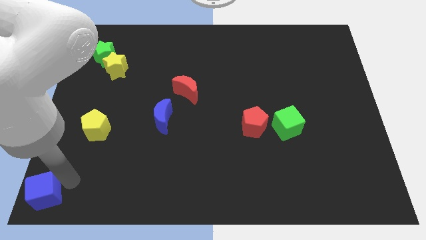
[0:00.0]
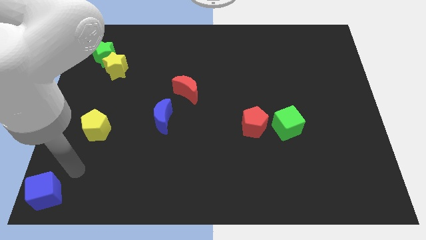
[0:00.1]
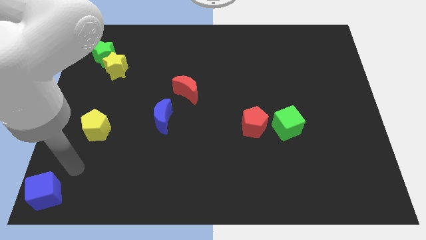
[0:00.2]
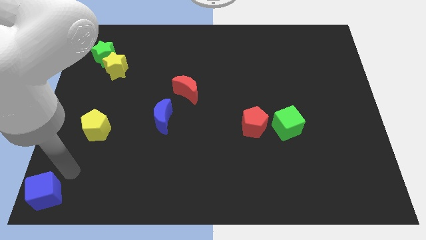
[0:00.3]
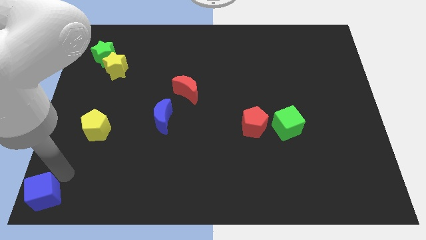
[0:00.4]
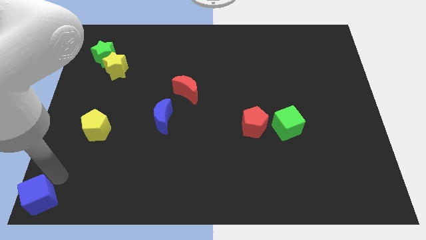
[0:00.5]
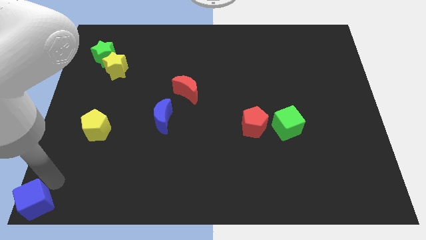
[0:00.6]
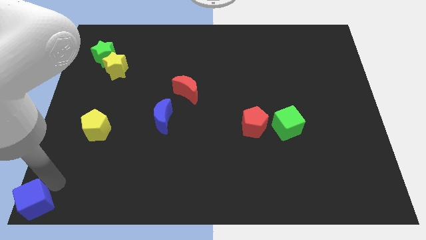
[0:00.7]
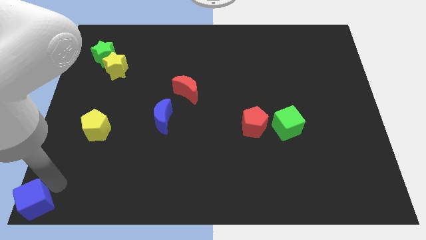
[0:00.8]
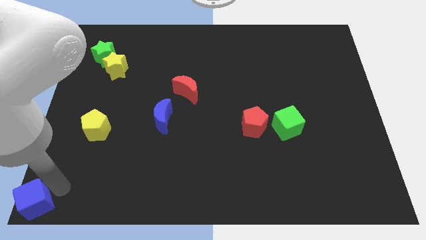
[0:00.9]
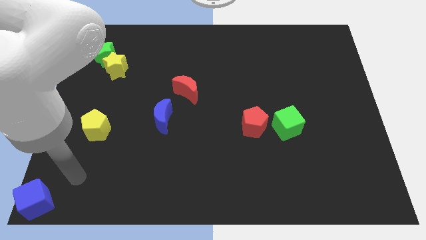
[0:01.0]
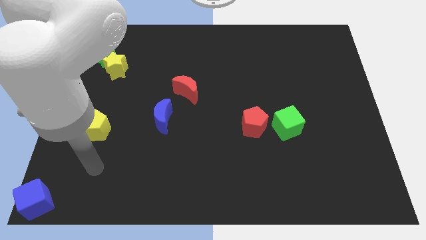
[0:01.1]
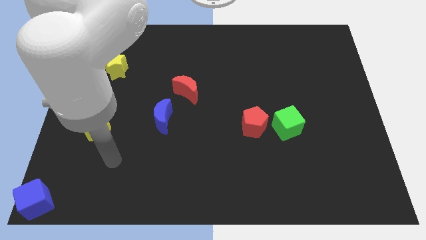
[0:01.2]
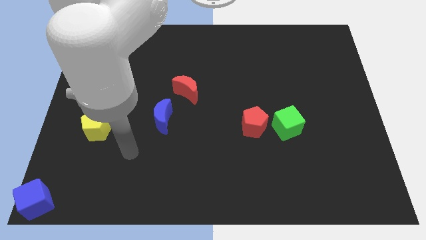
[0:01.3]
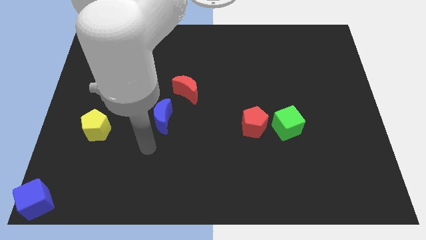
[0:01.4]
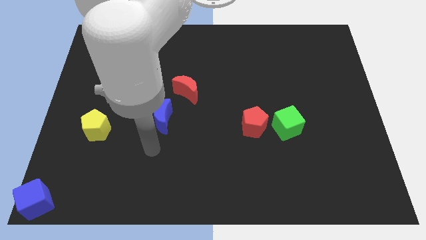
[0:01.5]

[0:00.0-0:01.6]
move the blue cube and place it at the left bottom side of the board

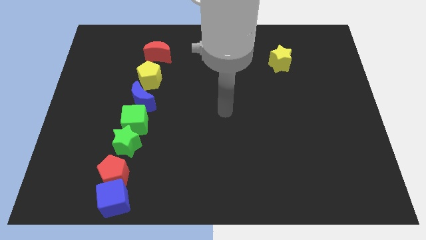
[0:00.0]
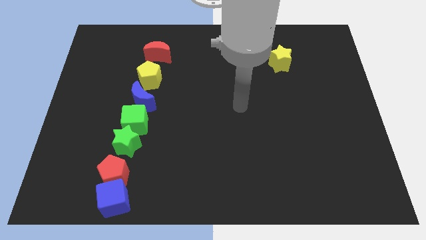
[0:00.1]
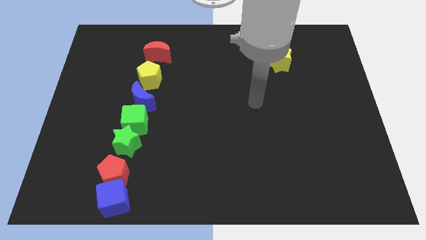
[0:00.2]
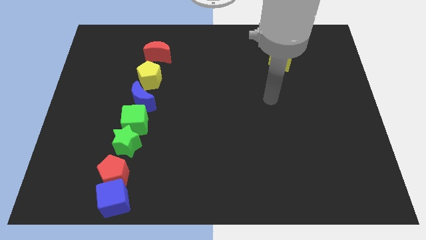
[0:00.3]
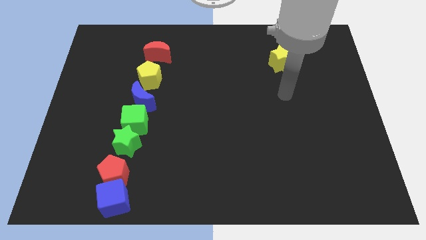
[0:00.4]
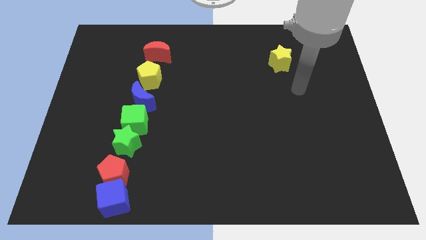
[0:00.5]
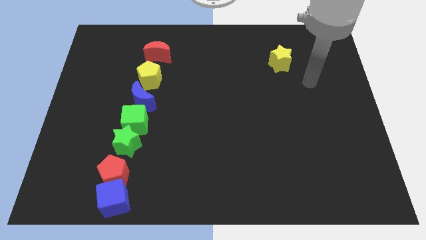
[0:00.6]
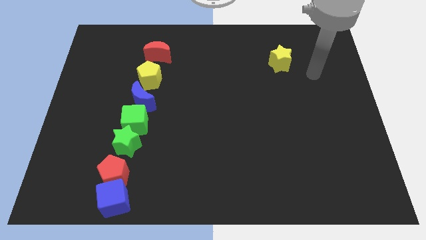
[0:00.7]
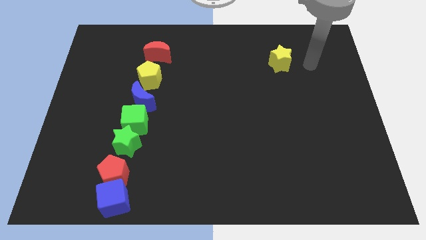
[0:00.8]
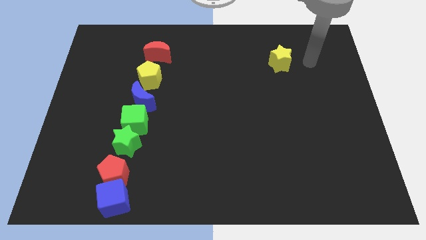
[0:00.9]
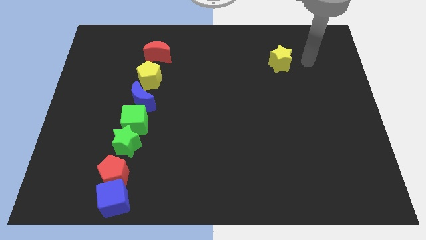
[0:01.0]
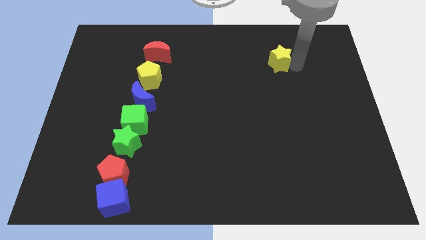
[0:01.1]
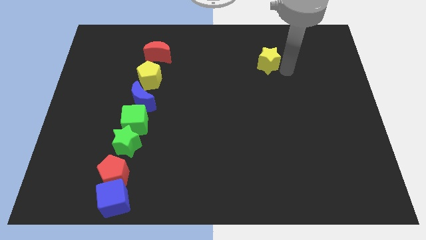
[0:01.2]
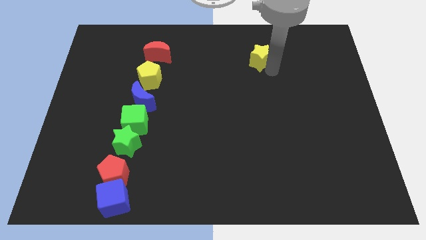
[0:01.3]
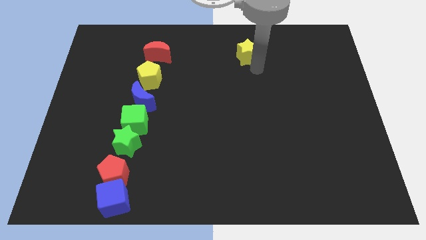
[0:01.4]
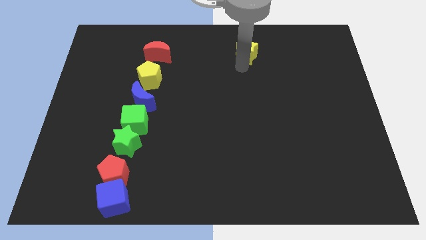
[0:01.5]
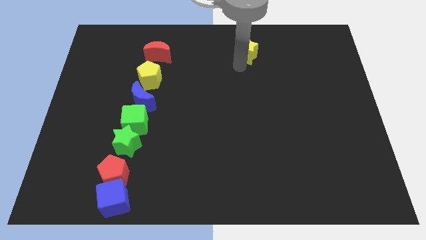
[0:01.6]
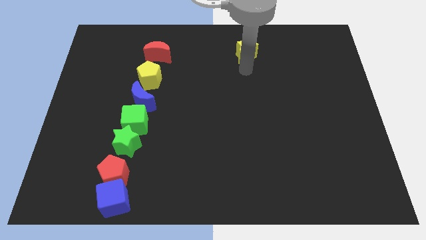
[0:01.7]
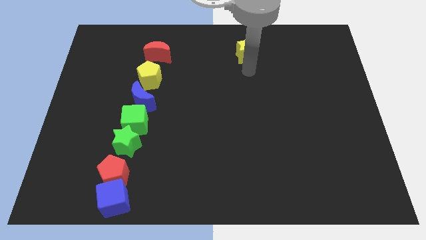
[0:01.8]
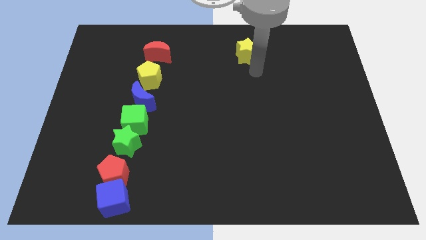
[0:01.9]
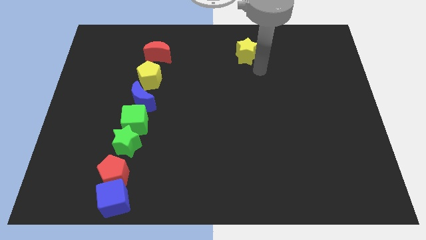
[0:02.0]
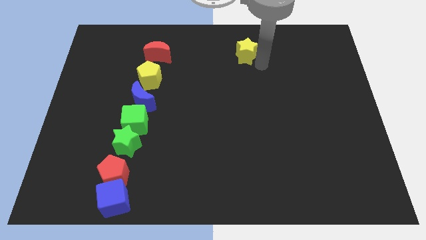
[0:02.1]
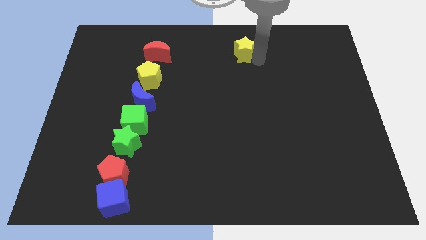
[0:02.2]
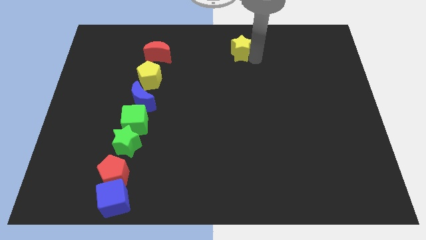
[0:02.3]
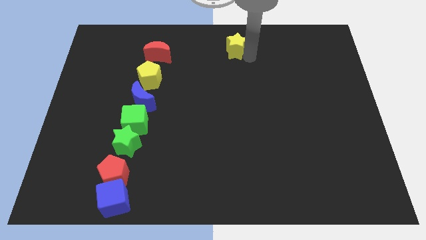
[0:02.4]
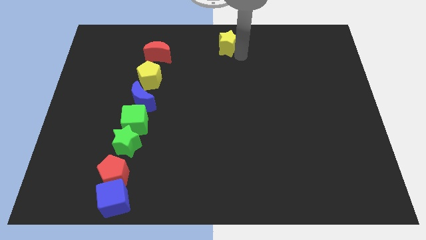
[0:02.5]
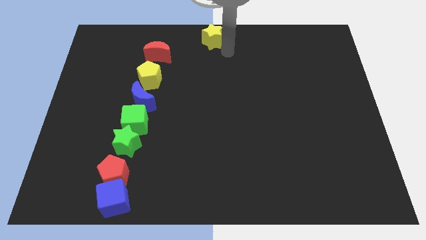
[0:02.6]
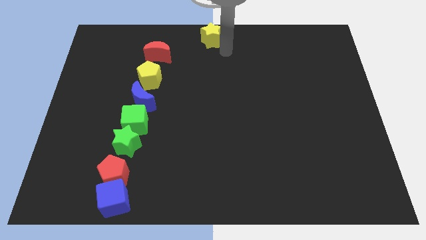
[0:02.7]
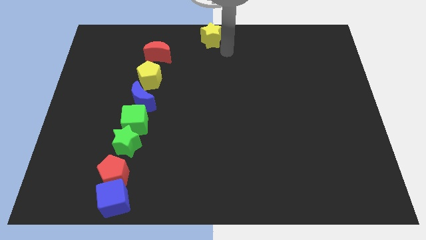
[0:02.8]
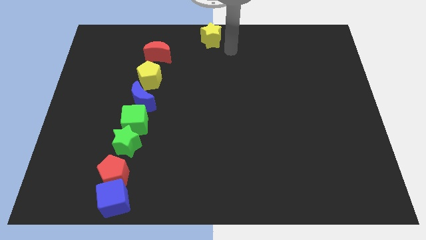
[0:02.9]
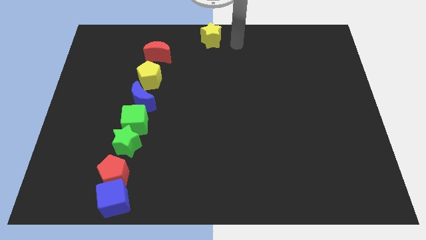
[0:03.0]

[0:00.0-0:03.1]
move yellow star in the top center

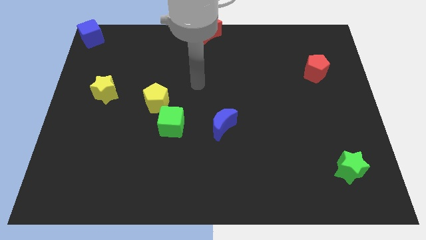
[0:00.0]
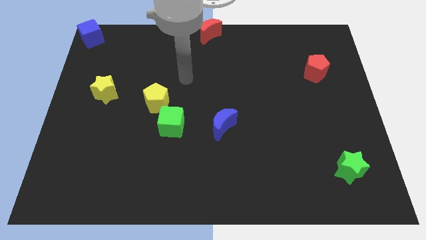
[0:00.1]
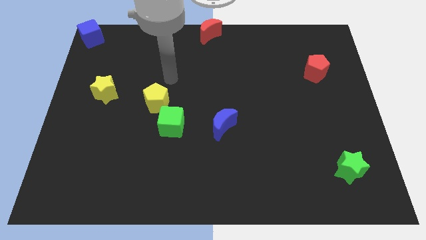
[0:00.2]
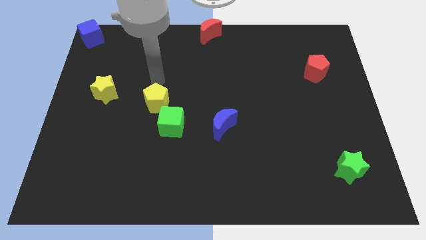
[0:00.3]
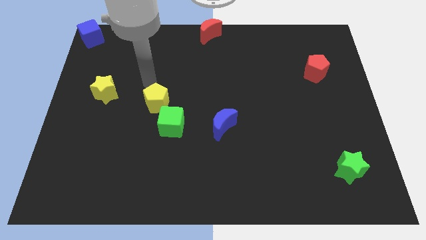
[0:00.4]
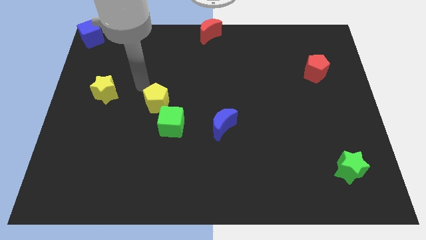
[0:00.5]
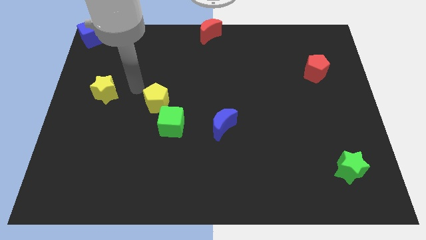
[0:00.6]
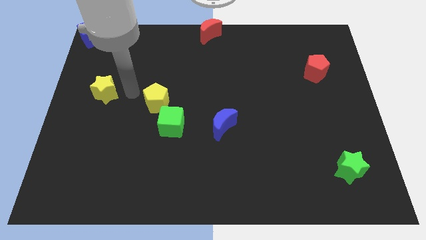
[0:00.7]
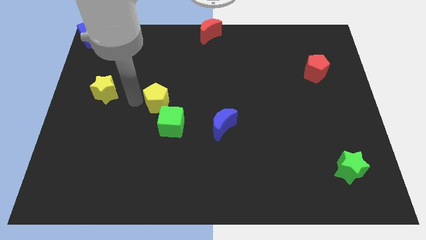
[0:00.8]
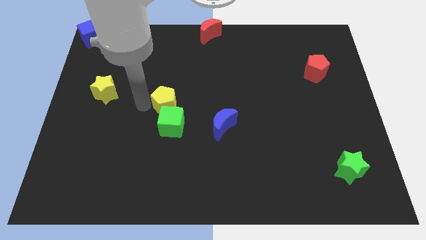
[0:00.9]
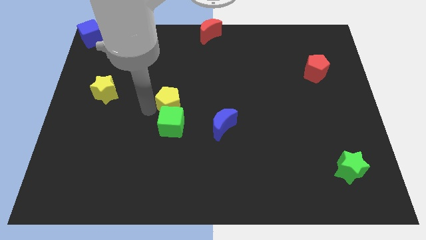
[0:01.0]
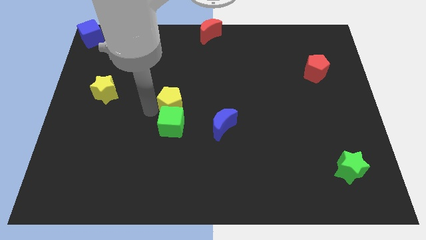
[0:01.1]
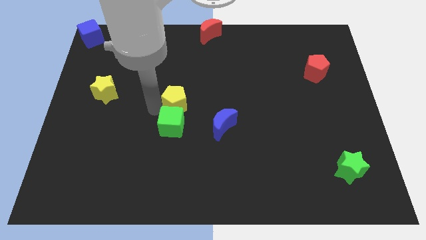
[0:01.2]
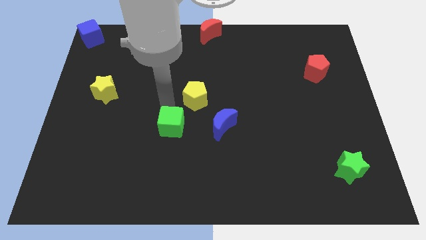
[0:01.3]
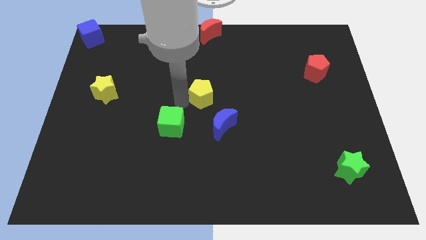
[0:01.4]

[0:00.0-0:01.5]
move the yellow pentagon to the centre of the board

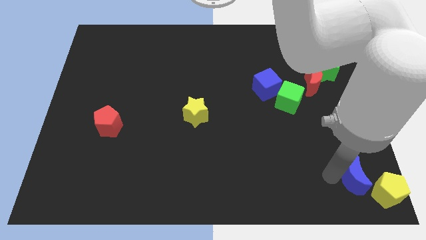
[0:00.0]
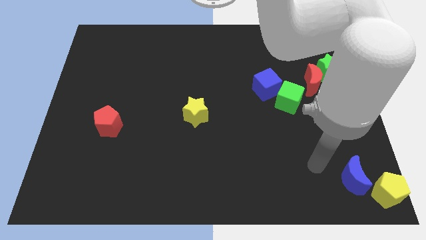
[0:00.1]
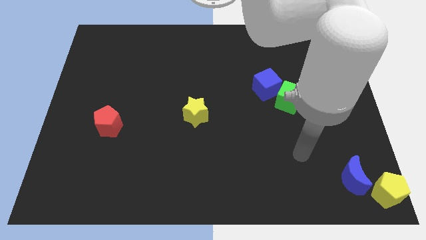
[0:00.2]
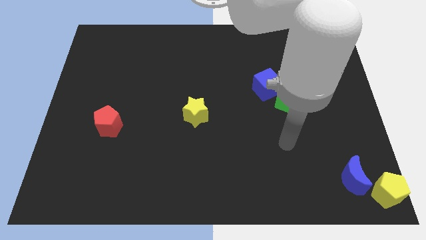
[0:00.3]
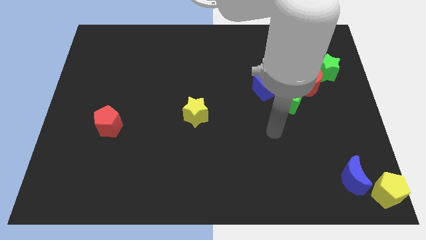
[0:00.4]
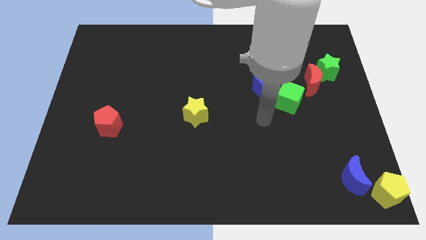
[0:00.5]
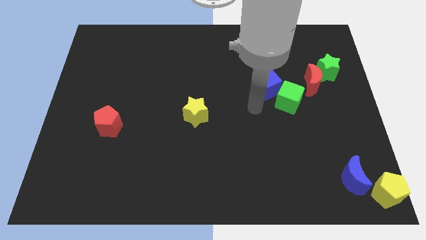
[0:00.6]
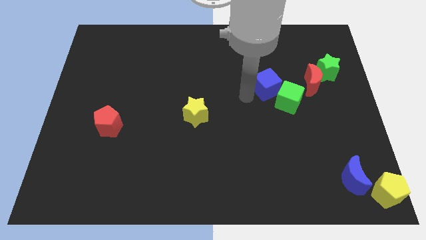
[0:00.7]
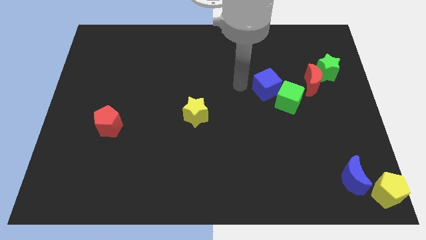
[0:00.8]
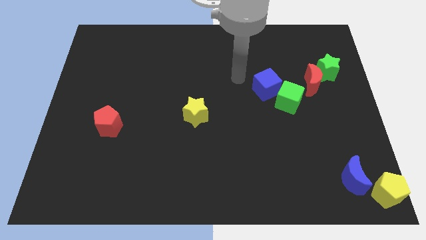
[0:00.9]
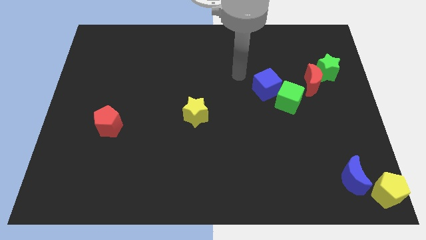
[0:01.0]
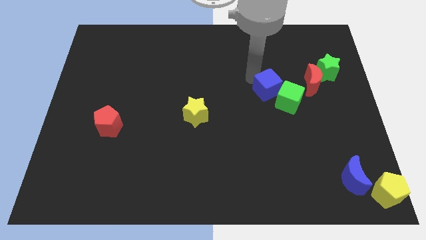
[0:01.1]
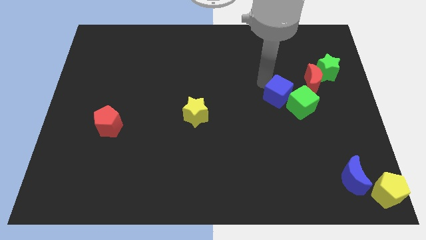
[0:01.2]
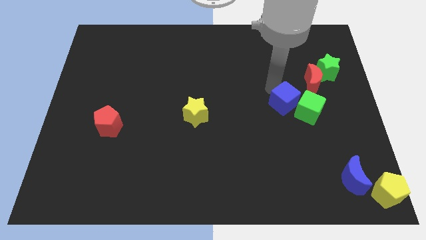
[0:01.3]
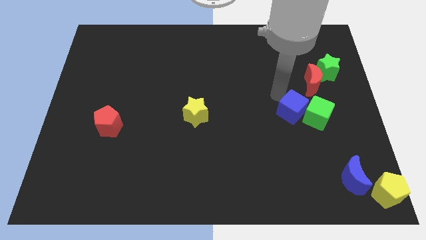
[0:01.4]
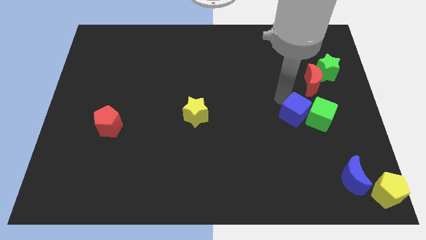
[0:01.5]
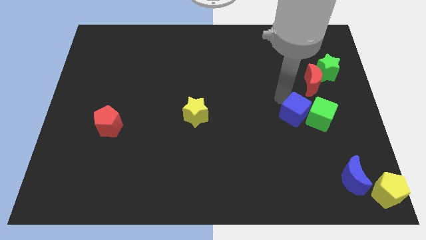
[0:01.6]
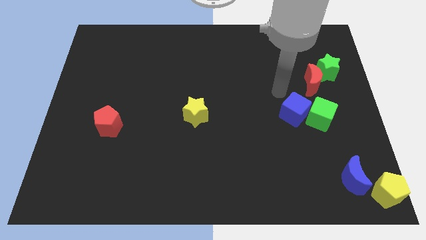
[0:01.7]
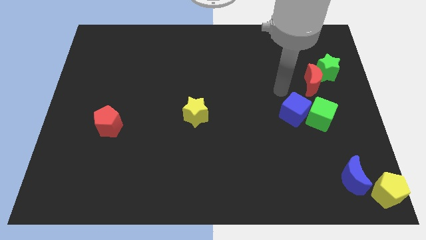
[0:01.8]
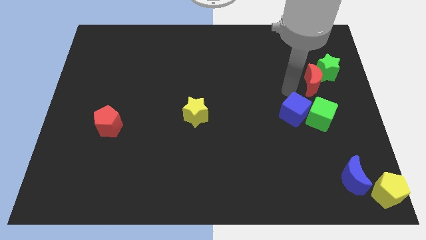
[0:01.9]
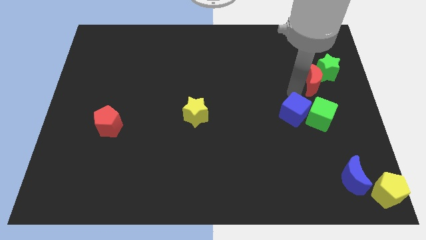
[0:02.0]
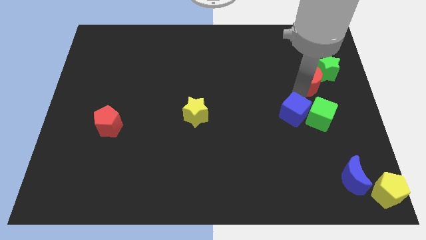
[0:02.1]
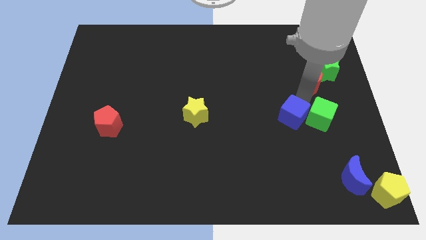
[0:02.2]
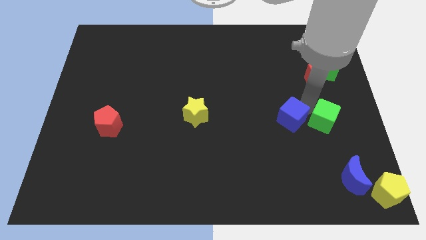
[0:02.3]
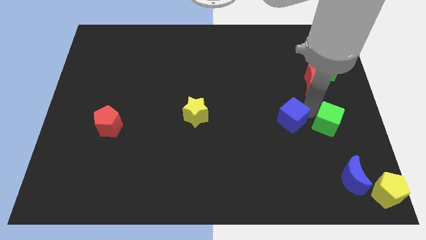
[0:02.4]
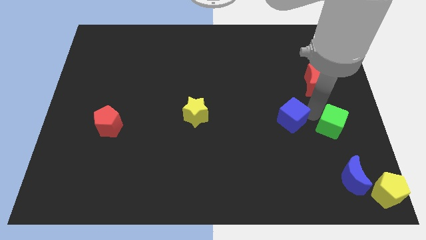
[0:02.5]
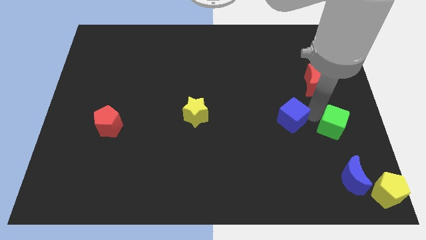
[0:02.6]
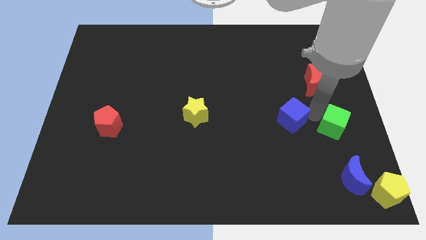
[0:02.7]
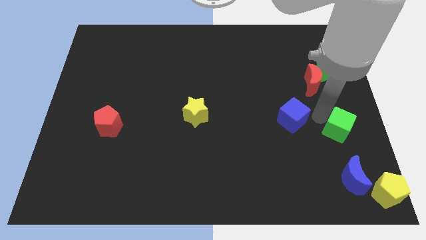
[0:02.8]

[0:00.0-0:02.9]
separate the green cube from the blue cube

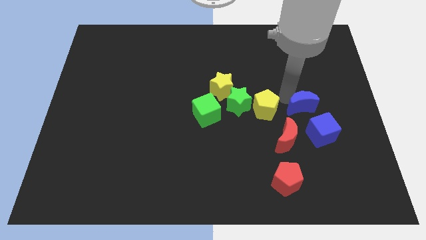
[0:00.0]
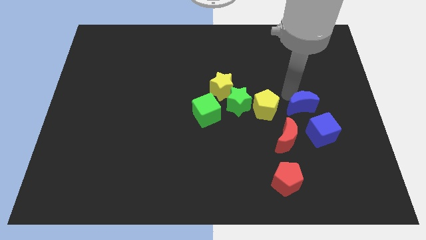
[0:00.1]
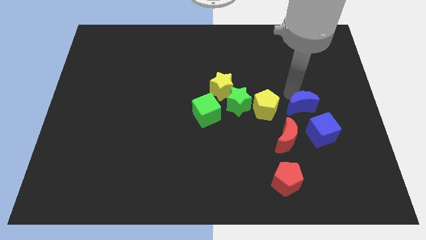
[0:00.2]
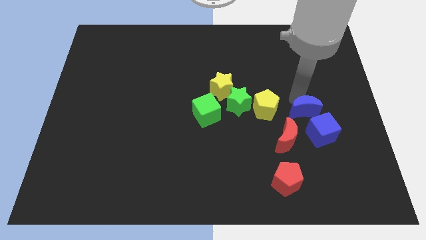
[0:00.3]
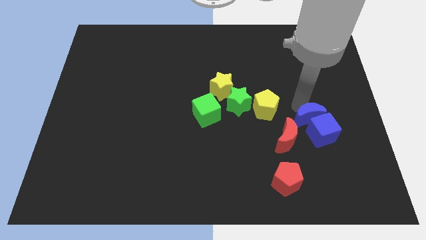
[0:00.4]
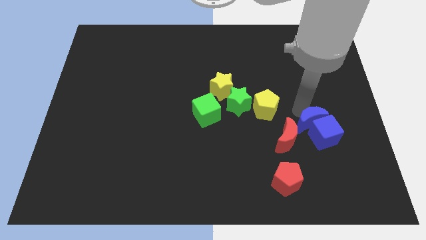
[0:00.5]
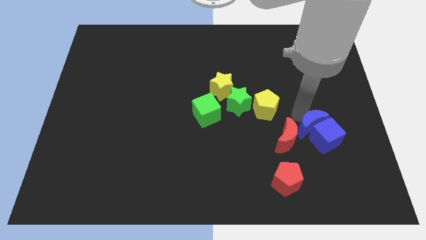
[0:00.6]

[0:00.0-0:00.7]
place the blue crescent to the right side of red crescent
